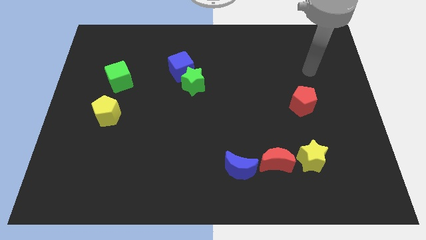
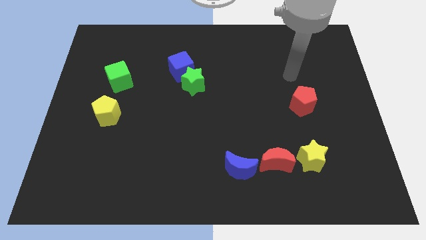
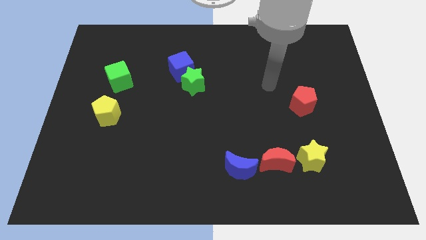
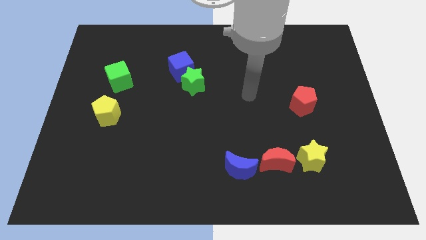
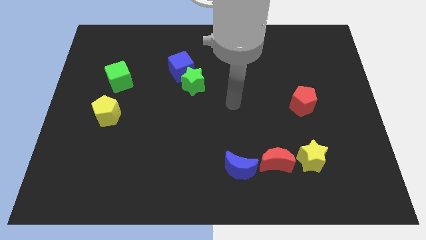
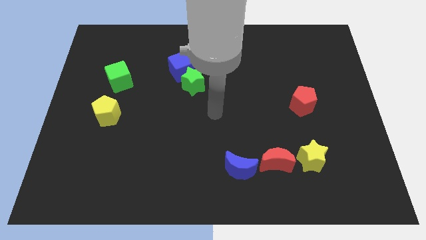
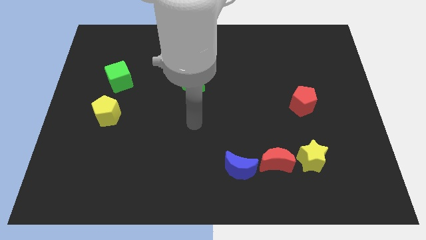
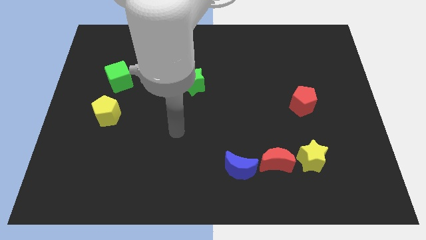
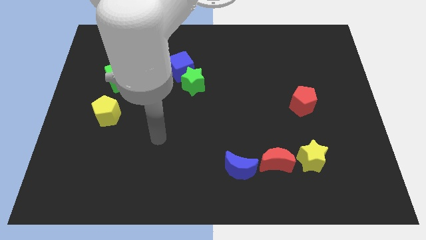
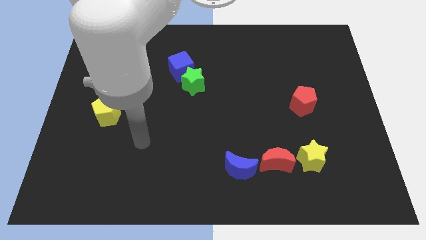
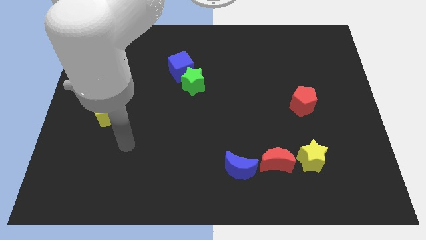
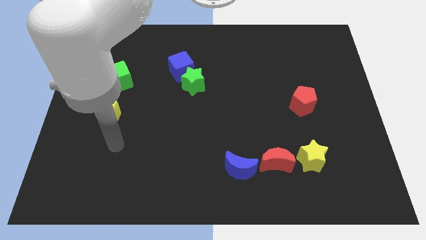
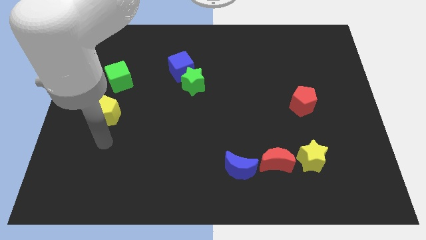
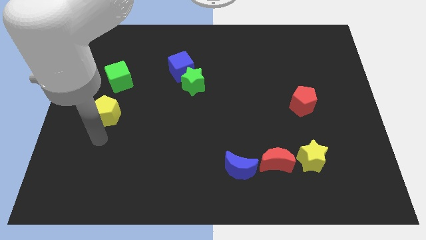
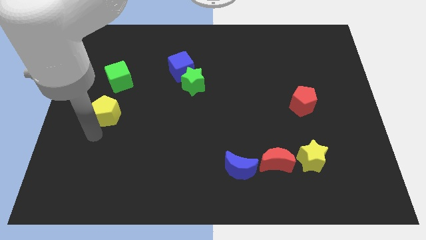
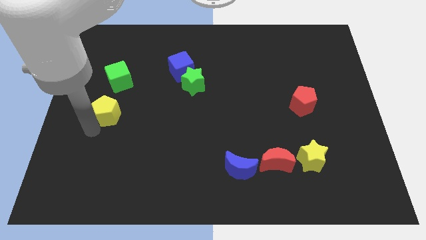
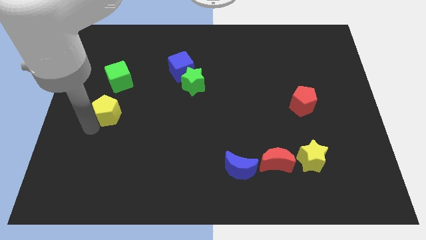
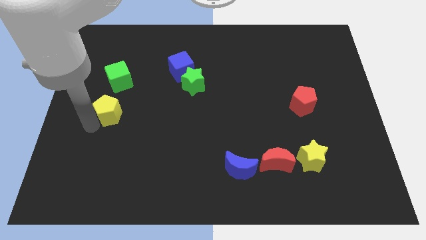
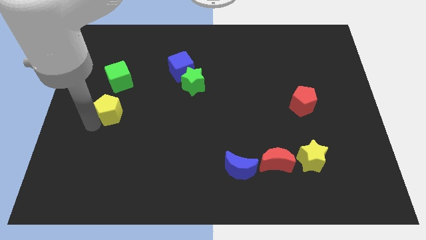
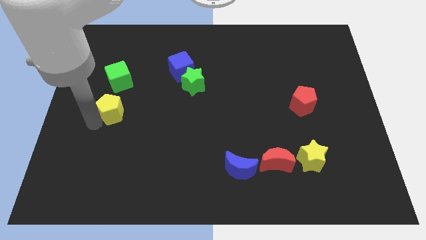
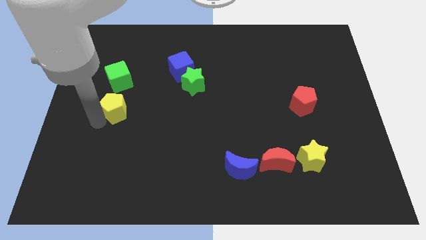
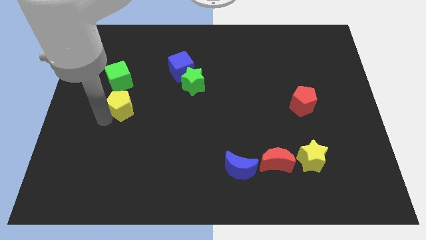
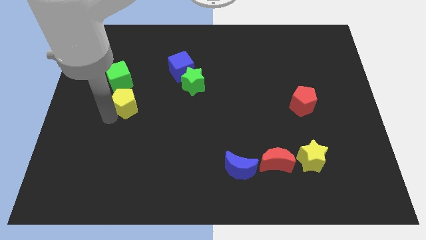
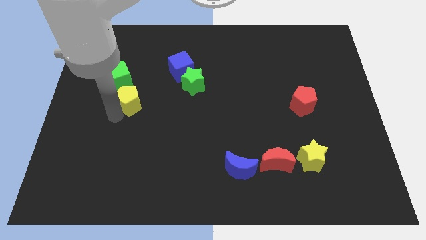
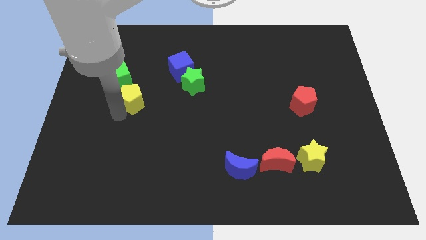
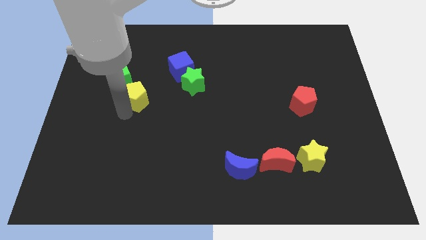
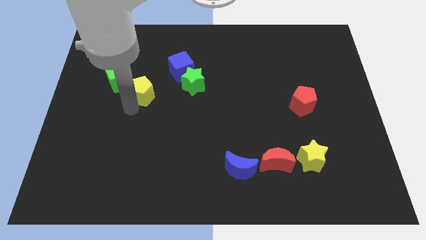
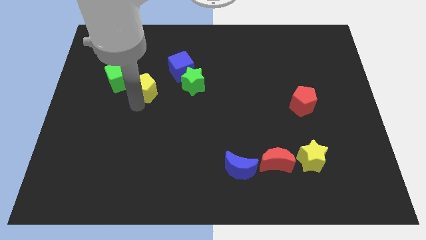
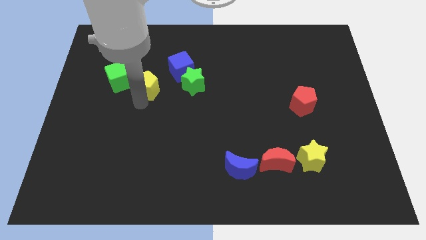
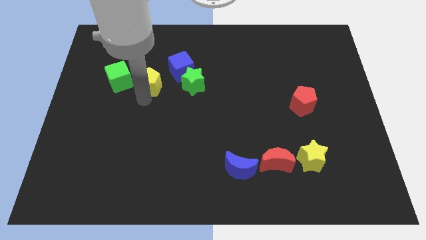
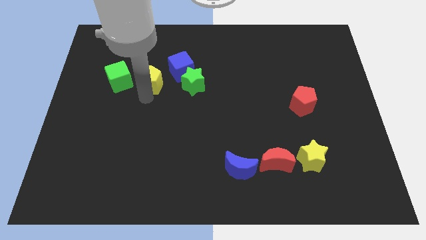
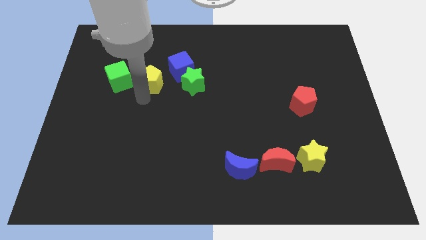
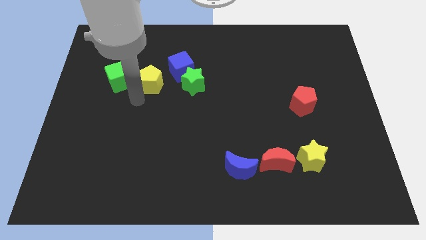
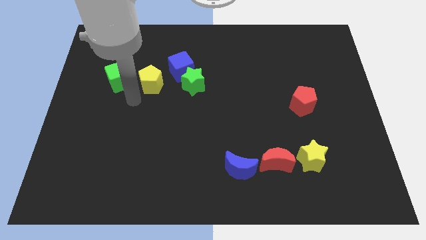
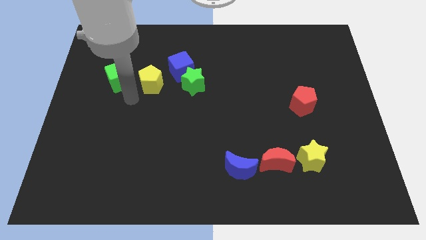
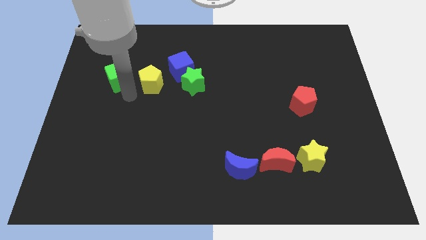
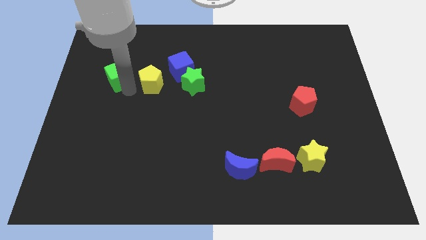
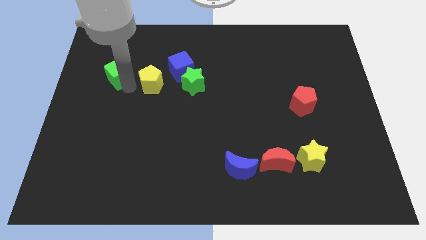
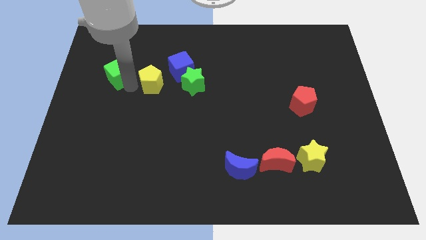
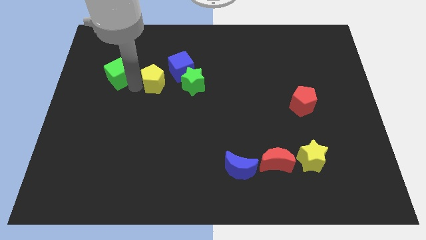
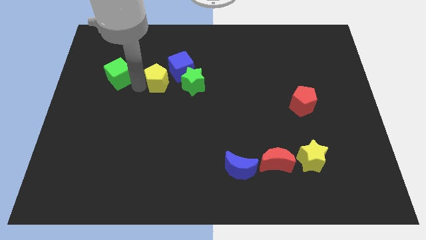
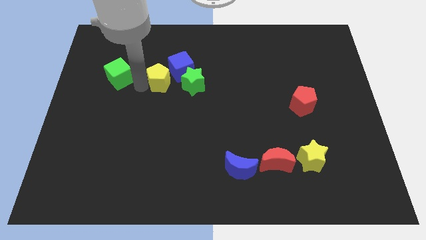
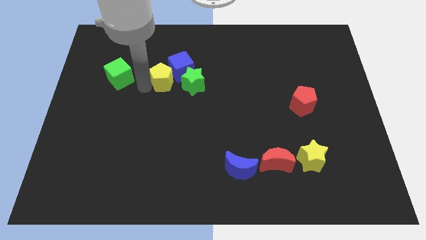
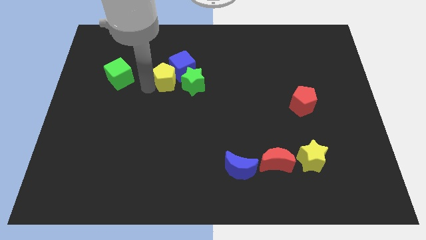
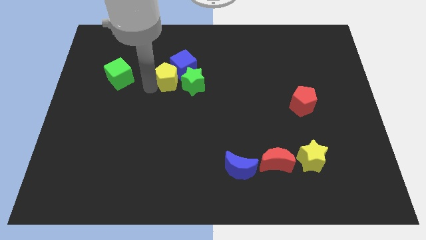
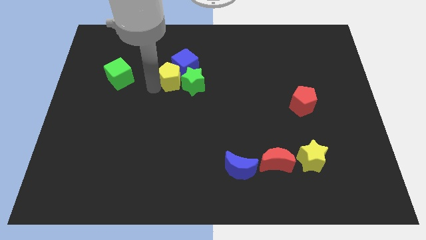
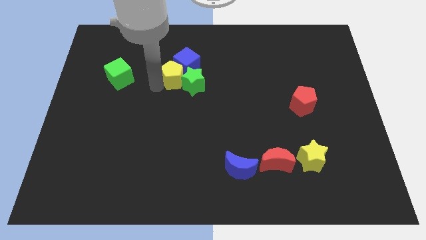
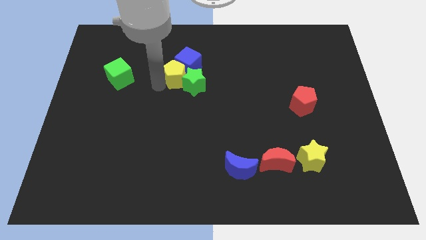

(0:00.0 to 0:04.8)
slide the yellow pentagon close to the green star

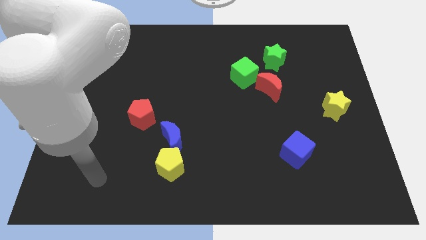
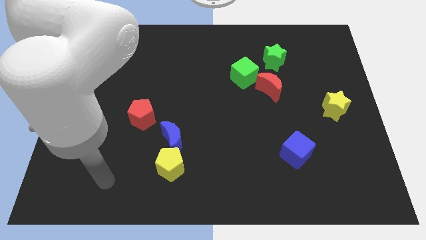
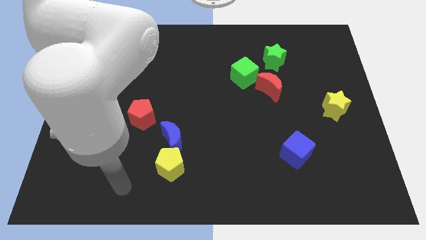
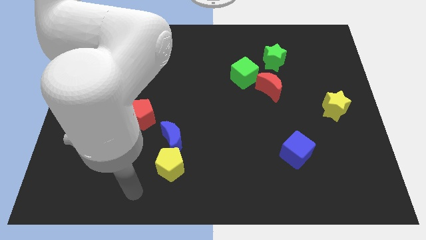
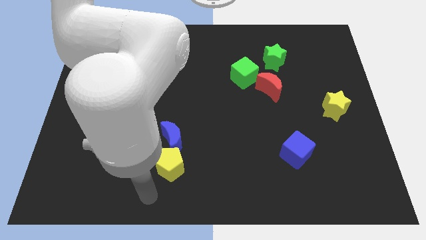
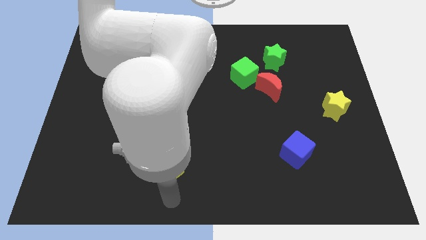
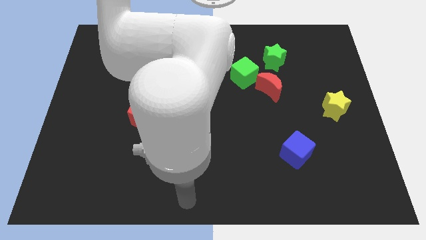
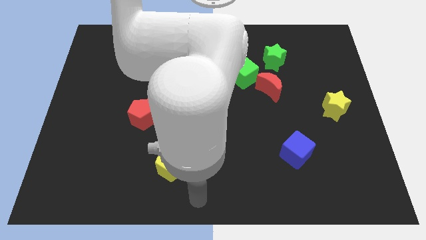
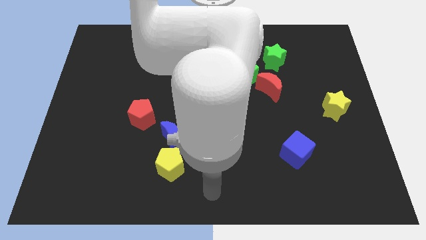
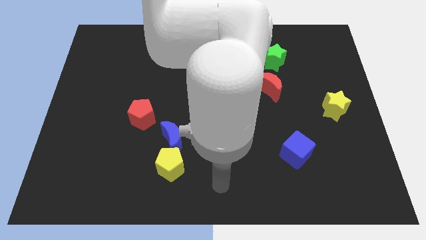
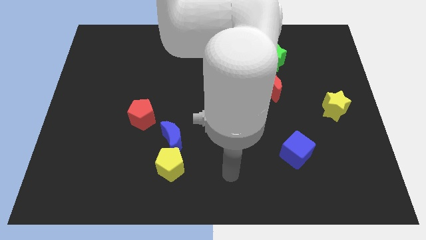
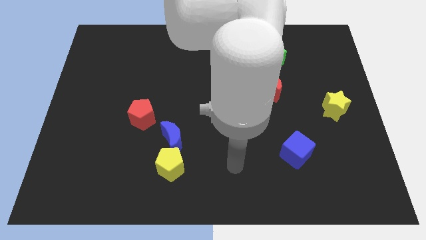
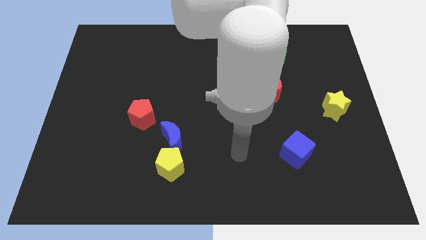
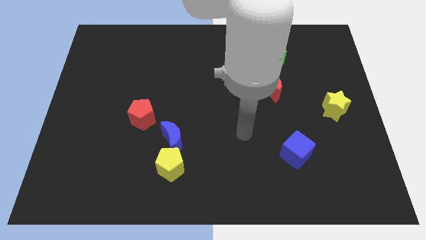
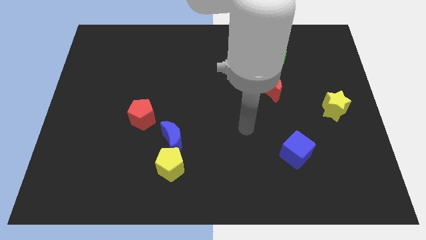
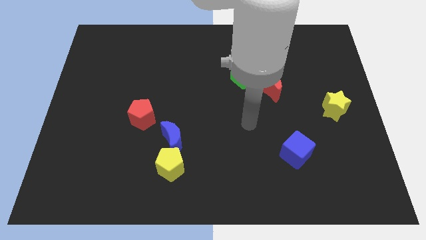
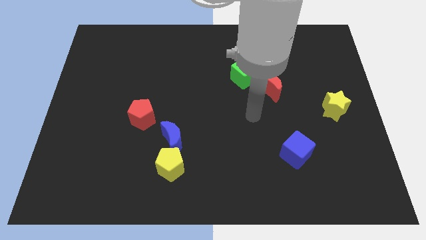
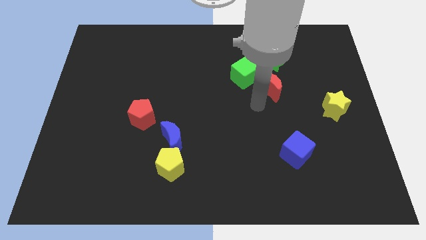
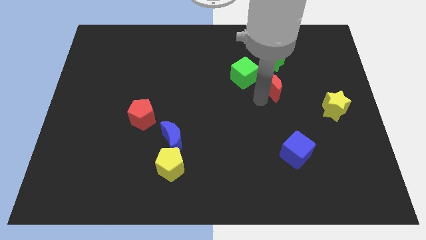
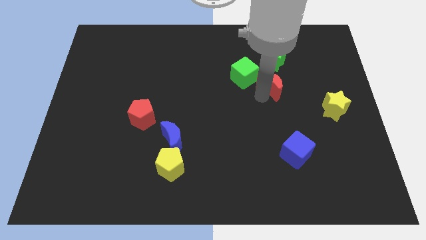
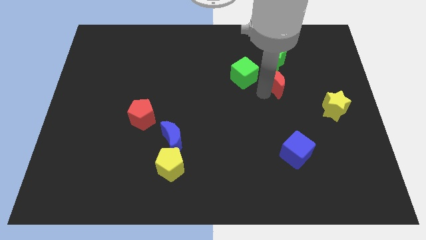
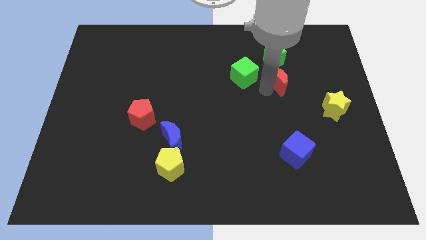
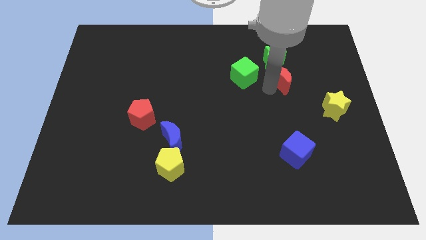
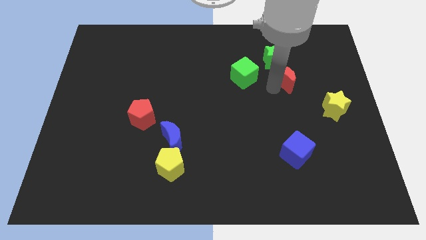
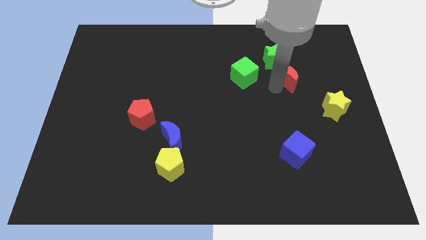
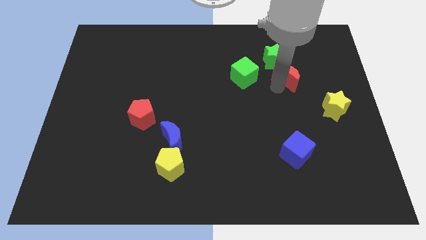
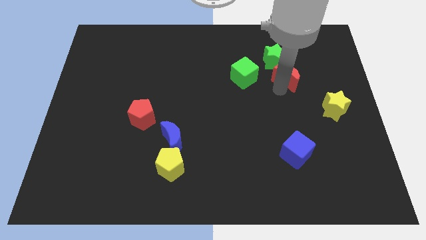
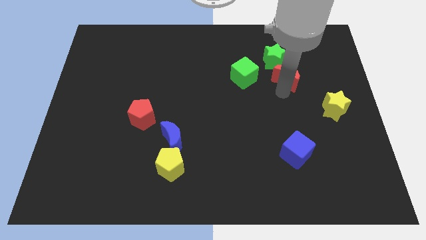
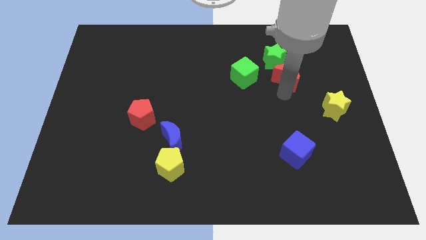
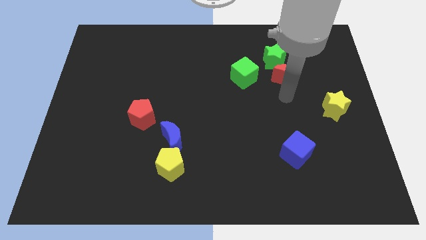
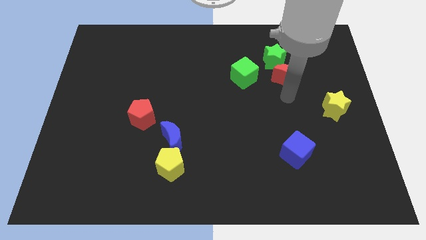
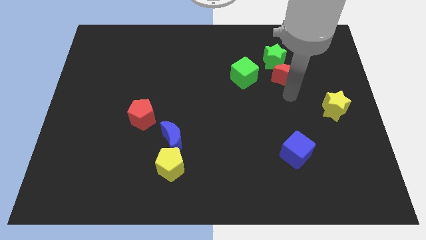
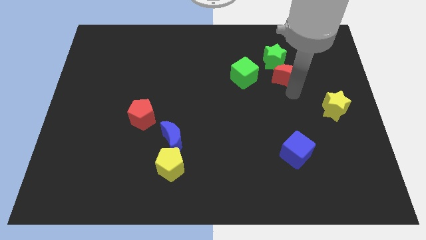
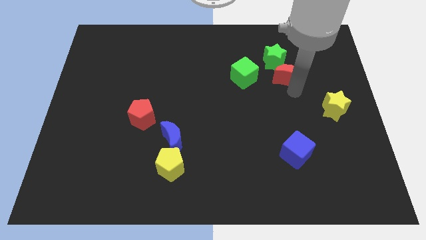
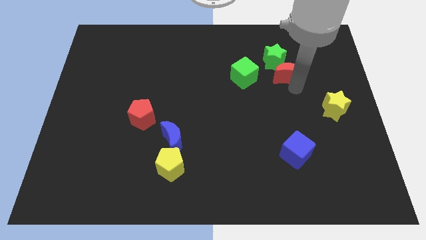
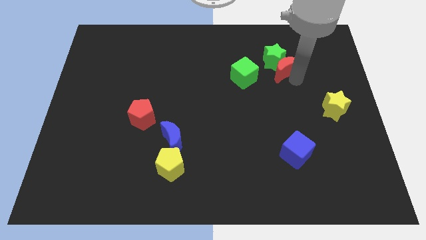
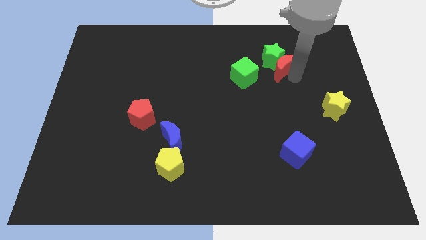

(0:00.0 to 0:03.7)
put the red moon to the green star
